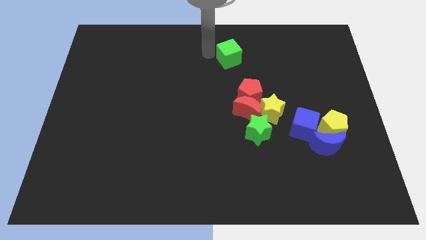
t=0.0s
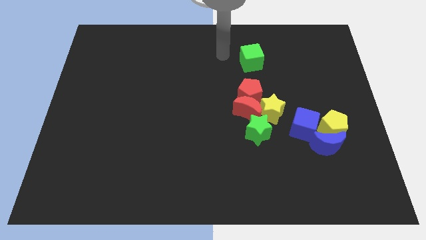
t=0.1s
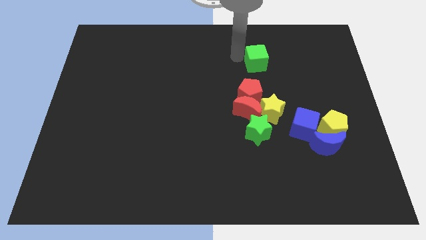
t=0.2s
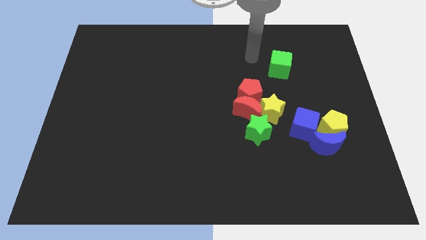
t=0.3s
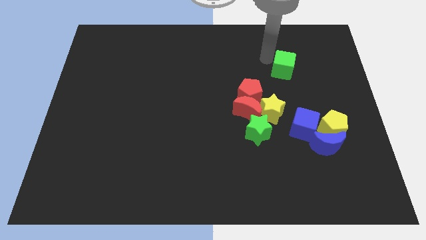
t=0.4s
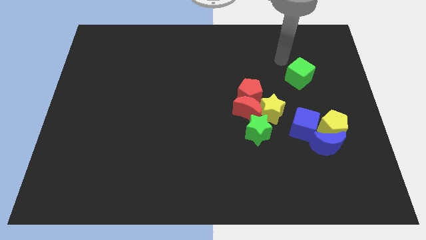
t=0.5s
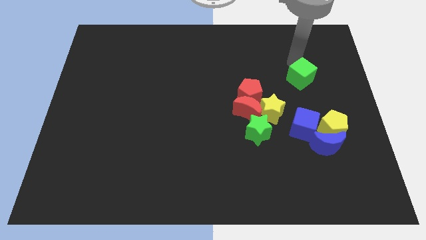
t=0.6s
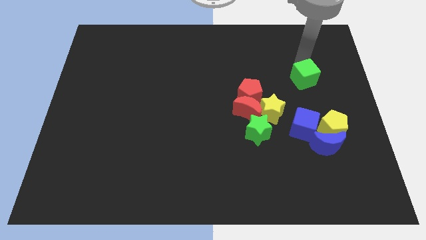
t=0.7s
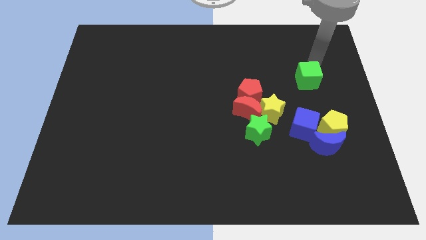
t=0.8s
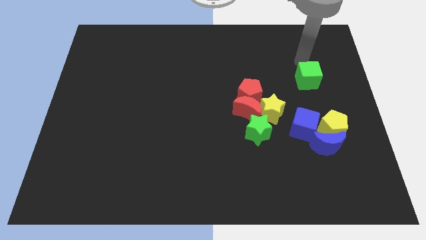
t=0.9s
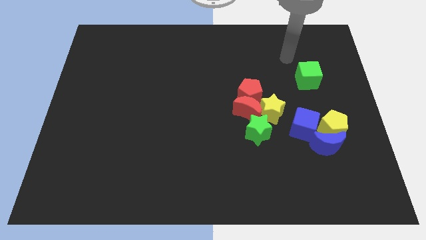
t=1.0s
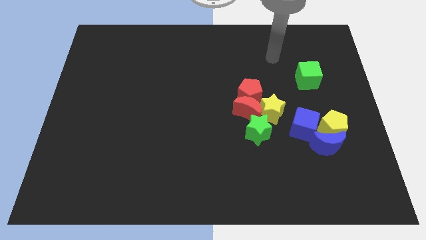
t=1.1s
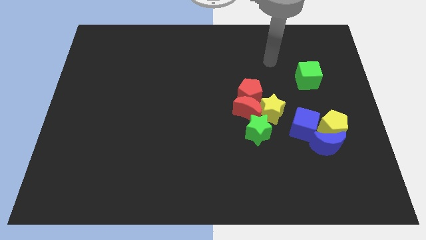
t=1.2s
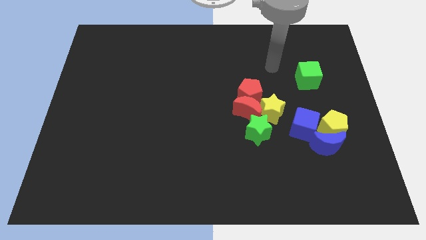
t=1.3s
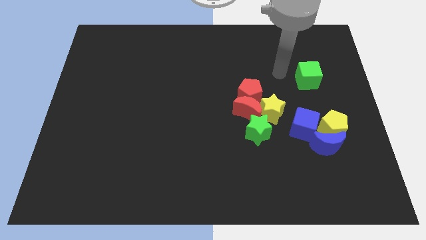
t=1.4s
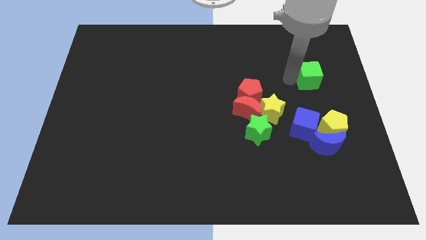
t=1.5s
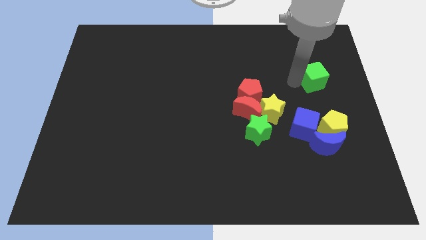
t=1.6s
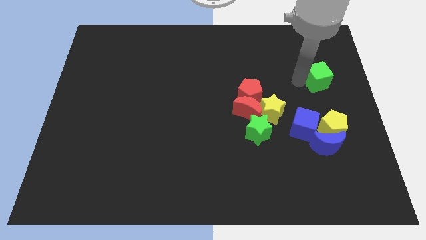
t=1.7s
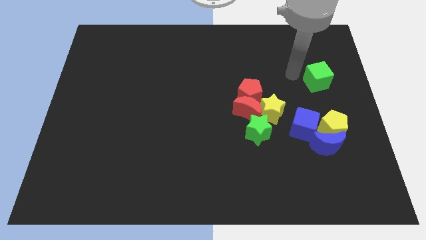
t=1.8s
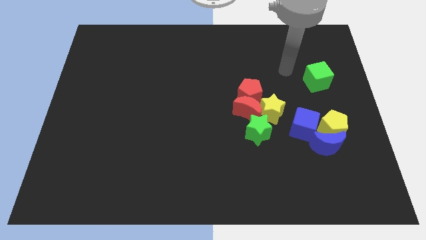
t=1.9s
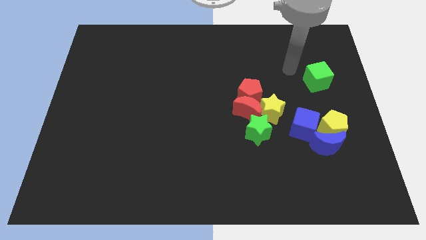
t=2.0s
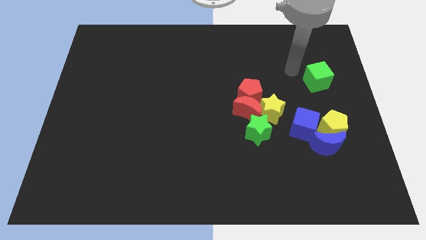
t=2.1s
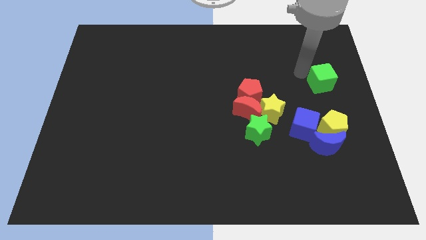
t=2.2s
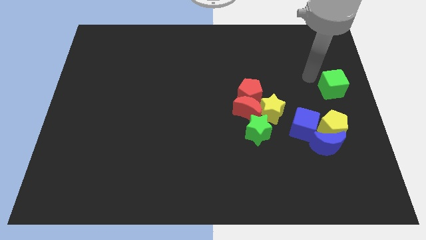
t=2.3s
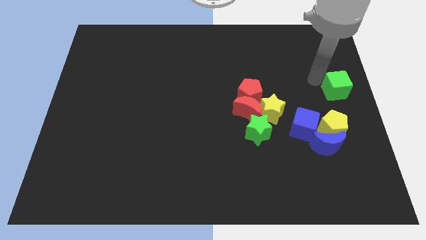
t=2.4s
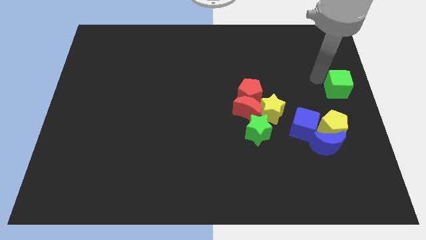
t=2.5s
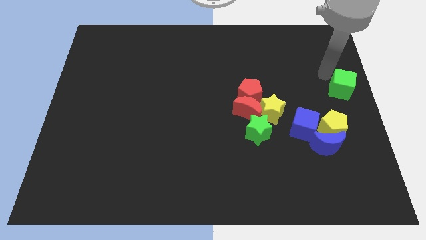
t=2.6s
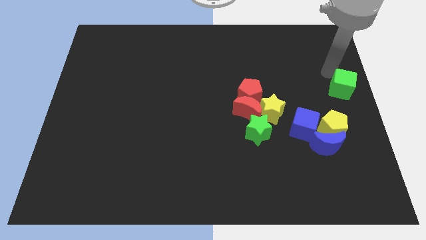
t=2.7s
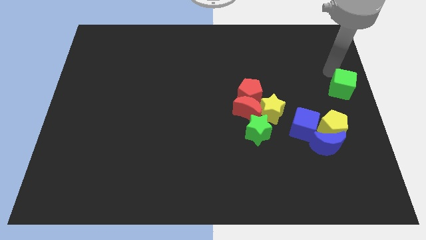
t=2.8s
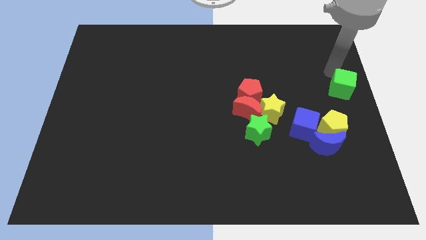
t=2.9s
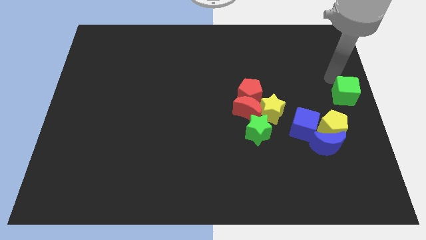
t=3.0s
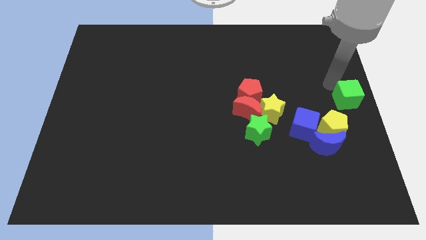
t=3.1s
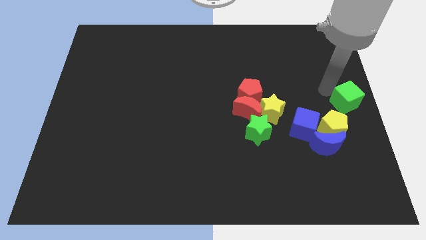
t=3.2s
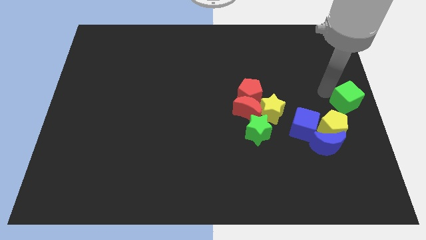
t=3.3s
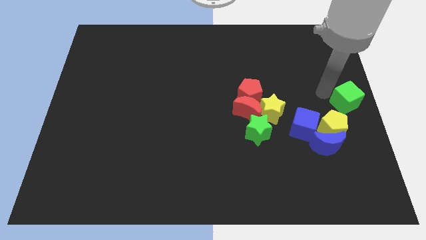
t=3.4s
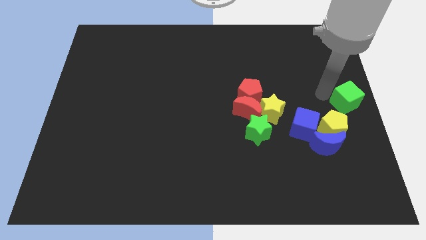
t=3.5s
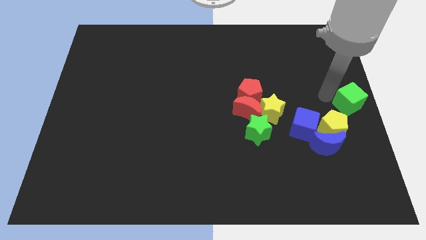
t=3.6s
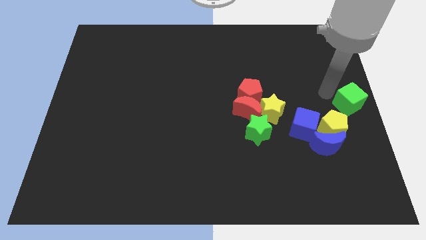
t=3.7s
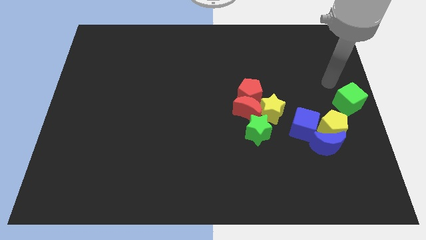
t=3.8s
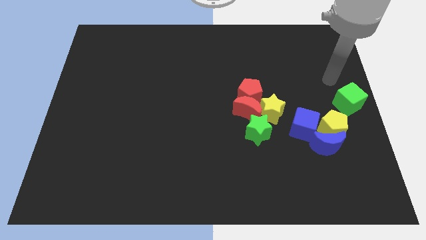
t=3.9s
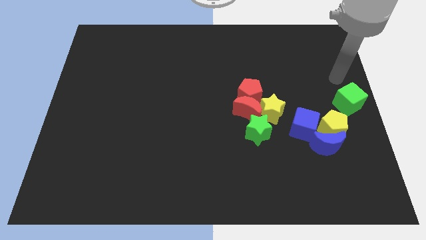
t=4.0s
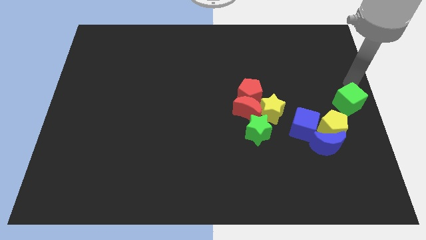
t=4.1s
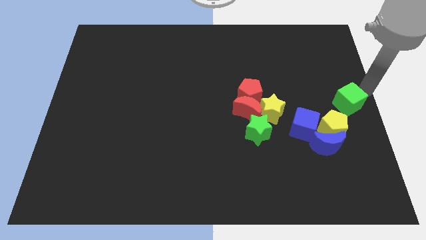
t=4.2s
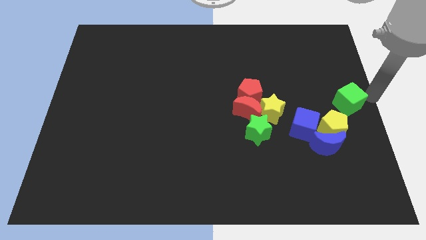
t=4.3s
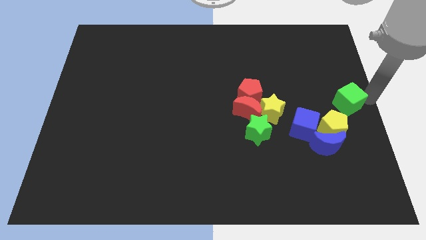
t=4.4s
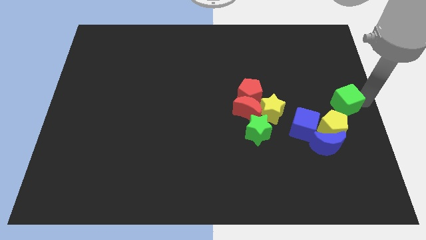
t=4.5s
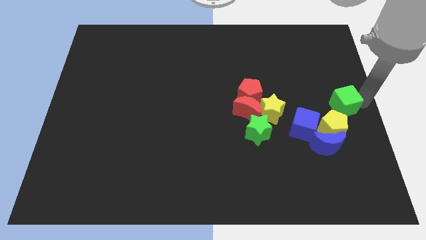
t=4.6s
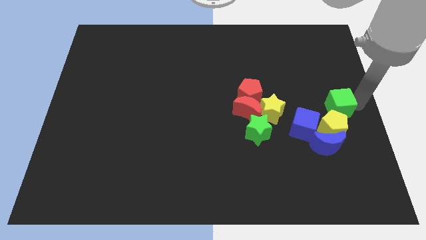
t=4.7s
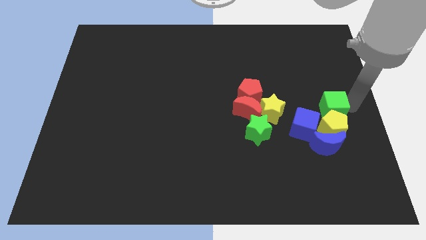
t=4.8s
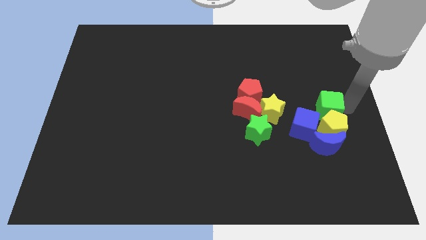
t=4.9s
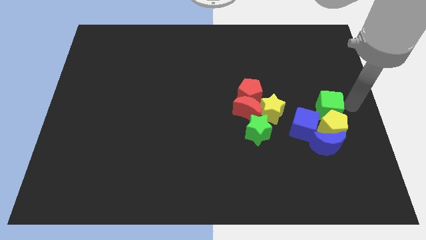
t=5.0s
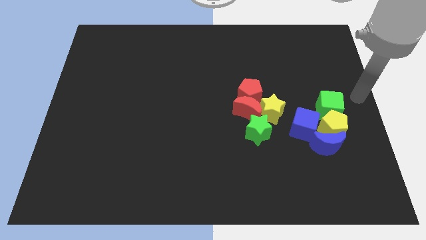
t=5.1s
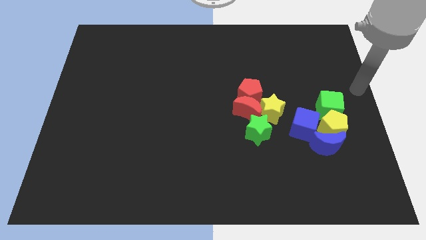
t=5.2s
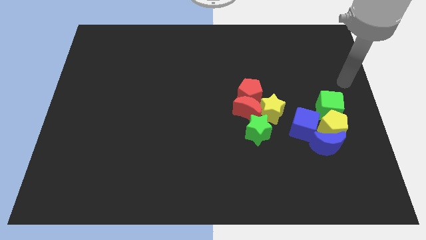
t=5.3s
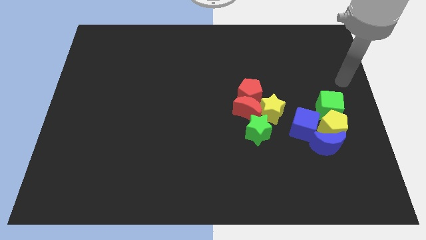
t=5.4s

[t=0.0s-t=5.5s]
place the green cube to the top of the yellow pentagon

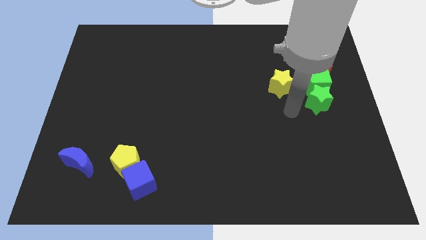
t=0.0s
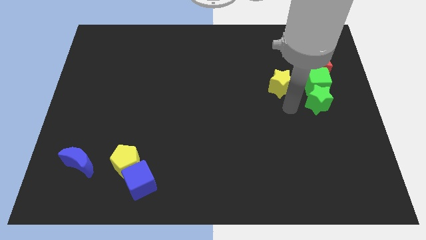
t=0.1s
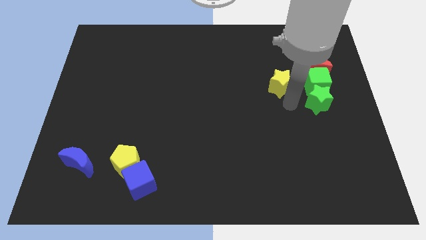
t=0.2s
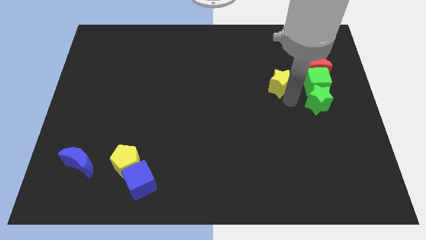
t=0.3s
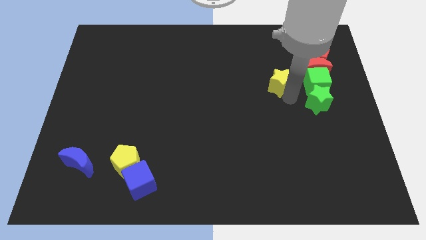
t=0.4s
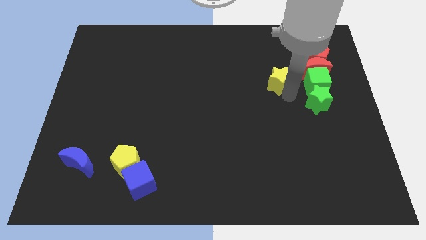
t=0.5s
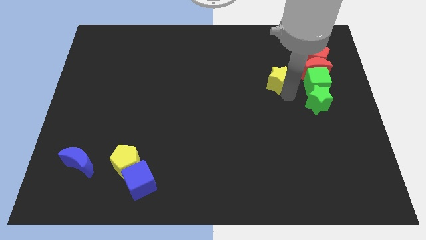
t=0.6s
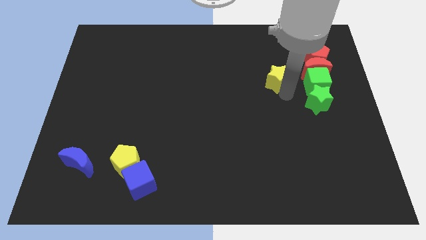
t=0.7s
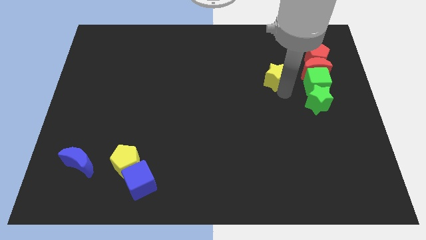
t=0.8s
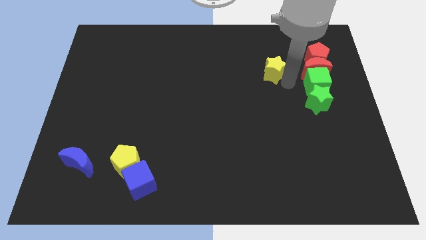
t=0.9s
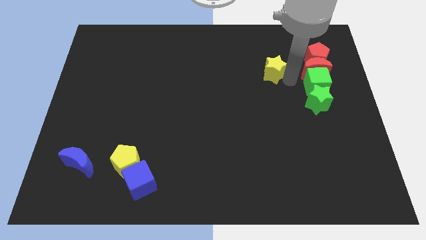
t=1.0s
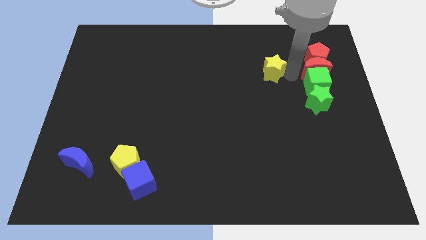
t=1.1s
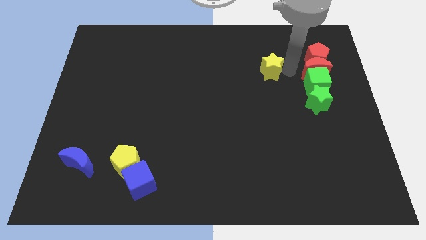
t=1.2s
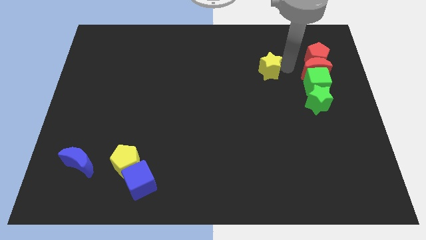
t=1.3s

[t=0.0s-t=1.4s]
place the yellow star parallel to red moon

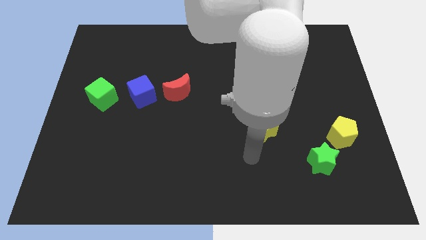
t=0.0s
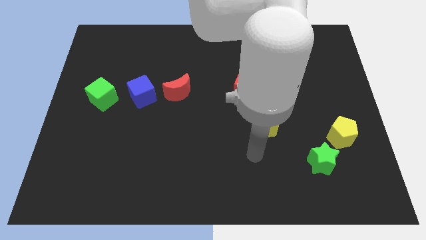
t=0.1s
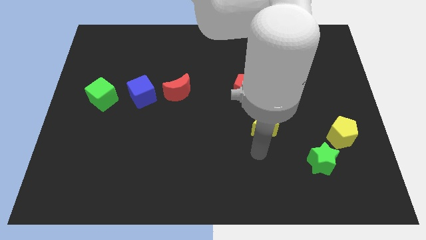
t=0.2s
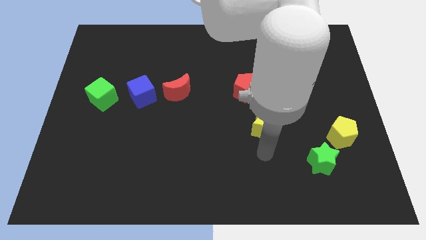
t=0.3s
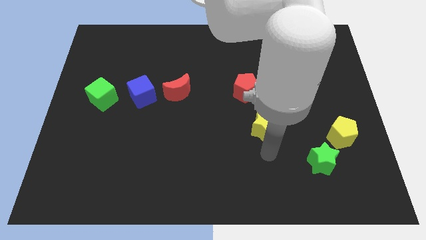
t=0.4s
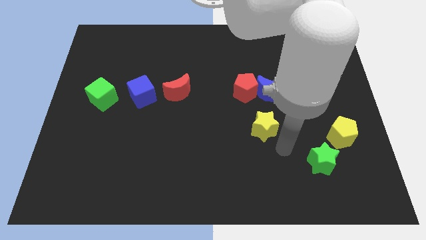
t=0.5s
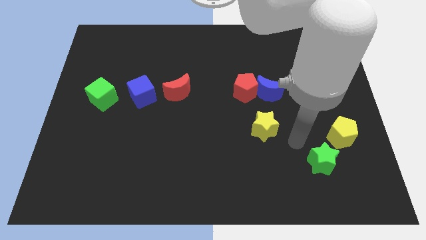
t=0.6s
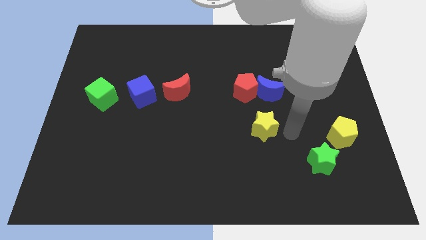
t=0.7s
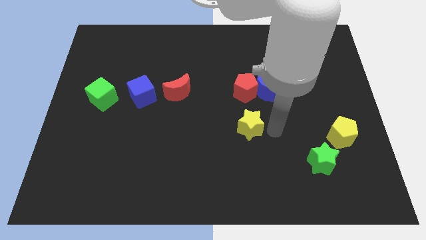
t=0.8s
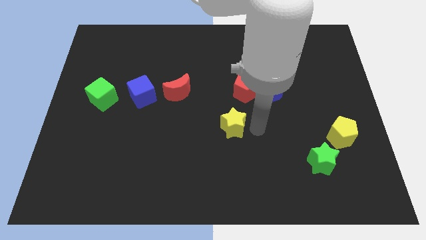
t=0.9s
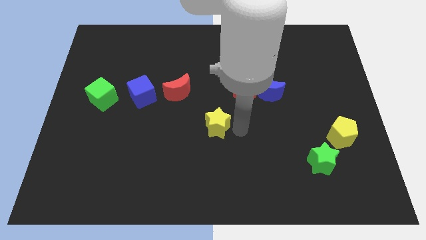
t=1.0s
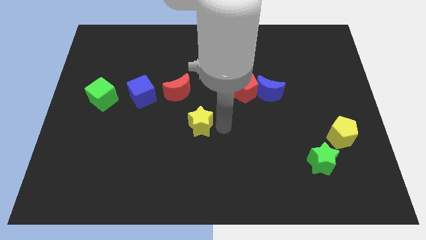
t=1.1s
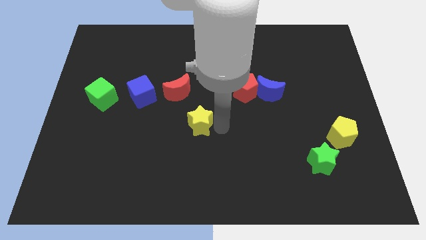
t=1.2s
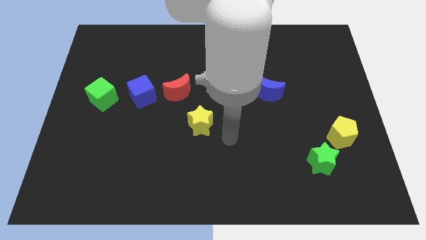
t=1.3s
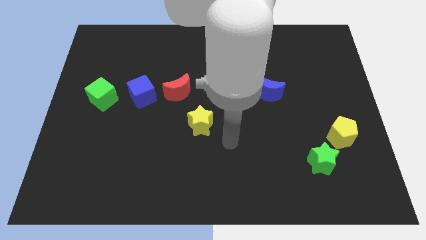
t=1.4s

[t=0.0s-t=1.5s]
place the yellow star diagonally bottom right to the red moon

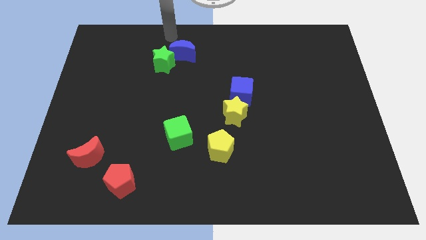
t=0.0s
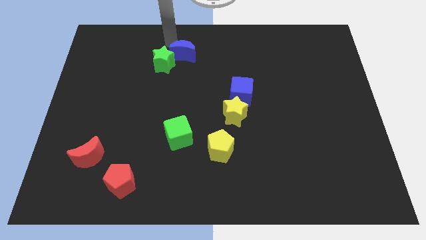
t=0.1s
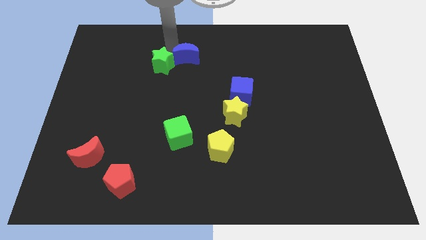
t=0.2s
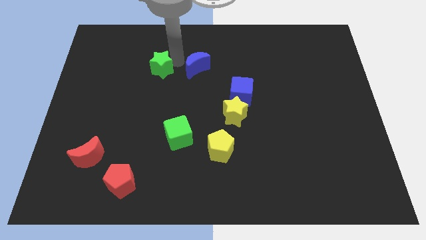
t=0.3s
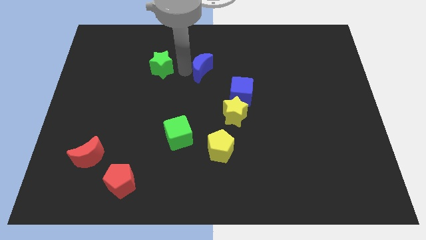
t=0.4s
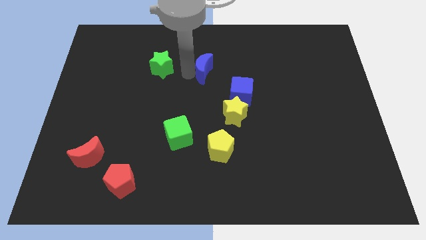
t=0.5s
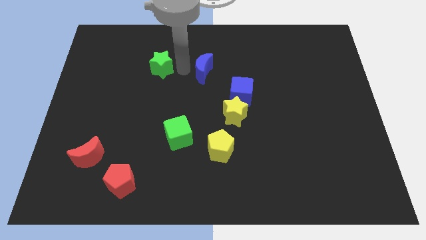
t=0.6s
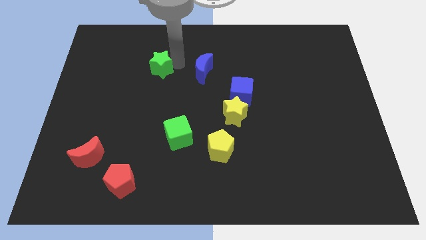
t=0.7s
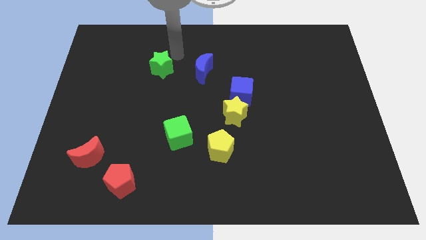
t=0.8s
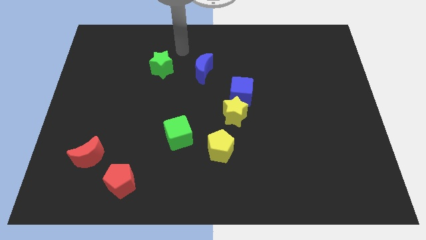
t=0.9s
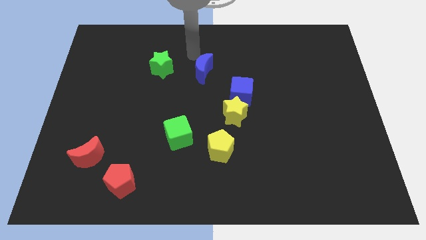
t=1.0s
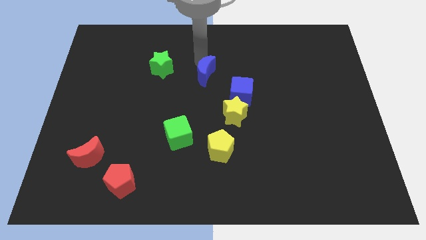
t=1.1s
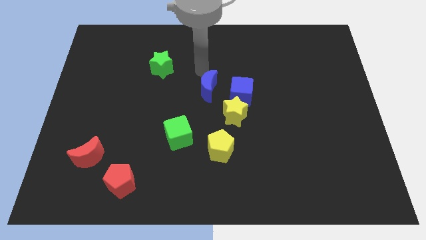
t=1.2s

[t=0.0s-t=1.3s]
place the blue crescent diagonally left of the blue cube
